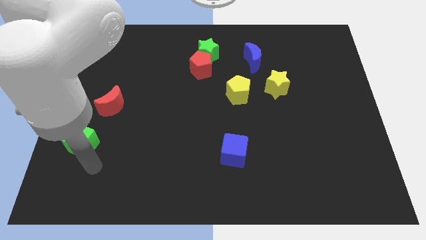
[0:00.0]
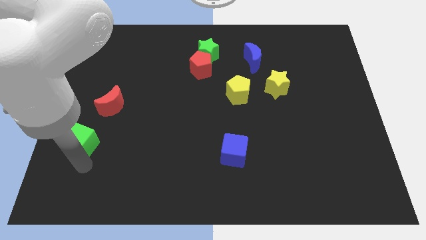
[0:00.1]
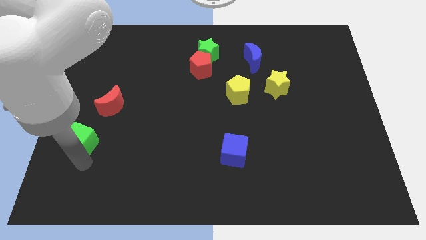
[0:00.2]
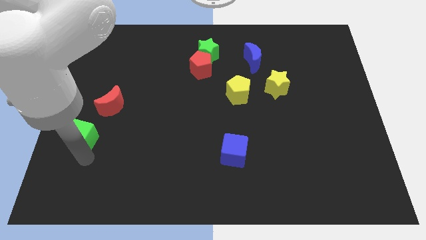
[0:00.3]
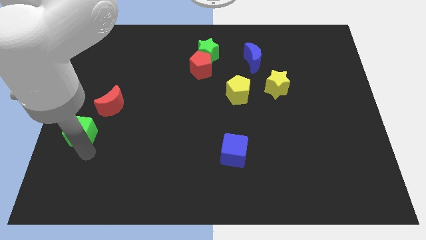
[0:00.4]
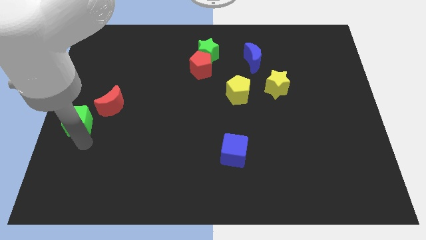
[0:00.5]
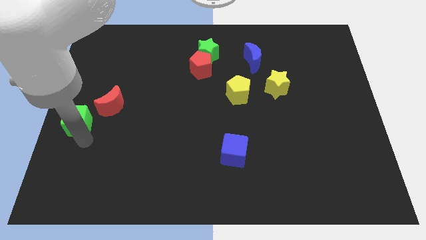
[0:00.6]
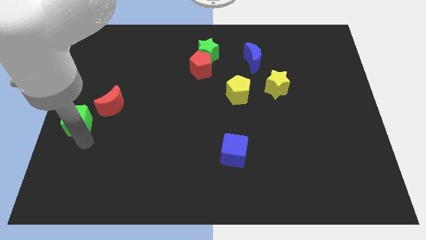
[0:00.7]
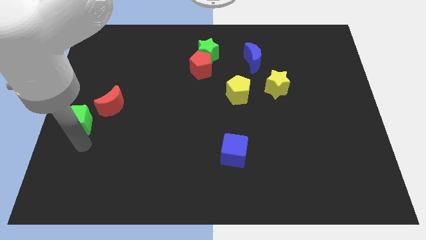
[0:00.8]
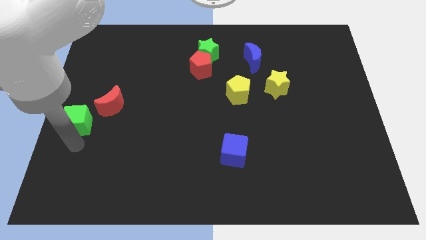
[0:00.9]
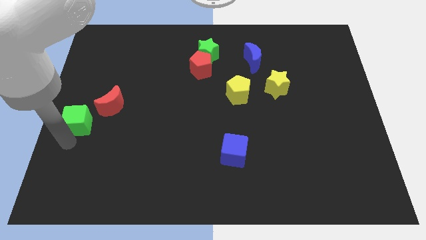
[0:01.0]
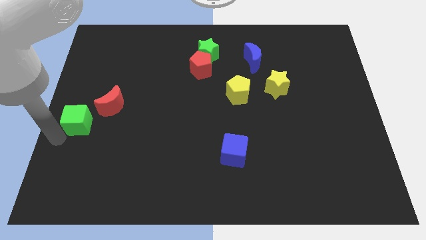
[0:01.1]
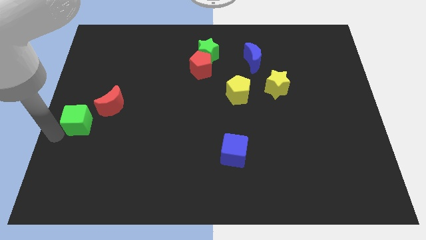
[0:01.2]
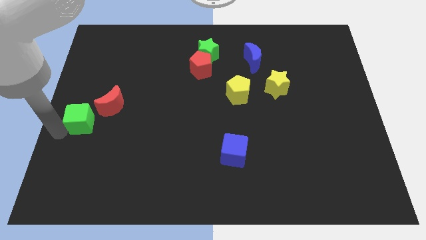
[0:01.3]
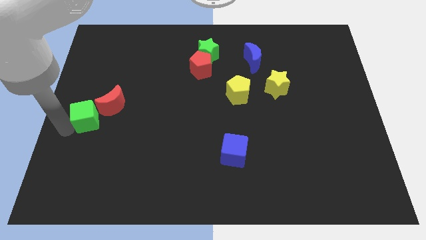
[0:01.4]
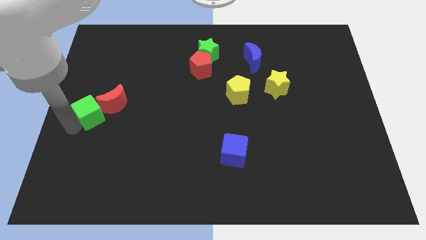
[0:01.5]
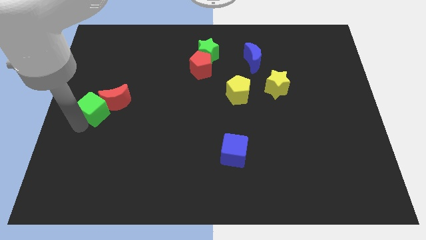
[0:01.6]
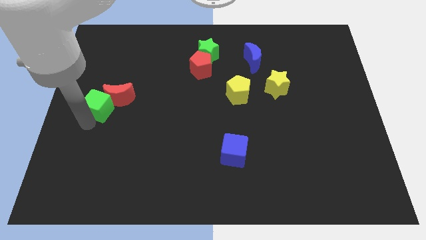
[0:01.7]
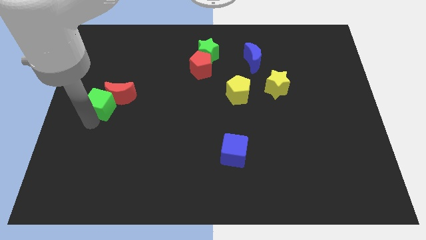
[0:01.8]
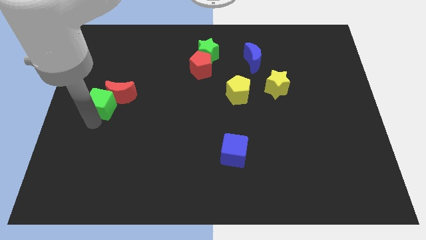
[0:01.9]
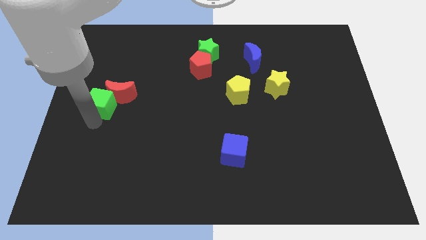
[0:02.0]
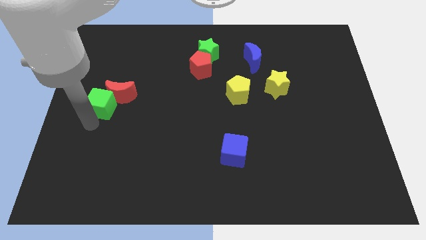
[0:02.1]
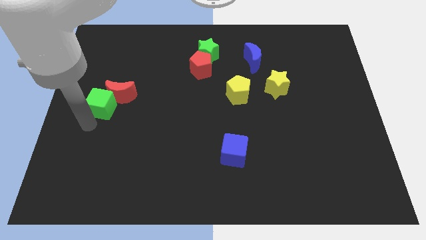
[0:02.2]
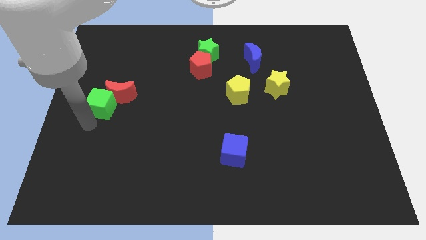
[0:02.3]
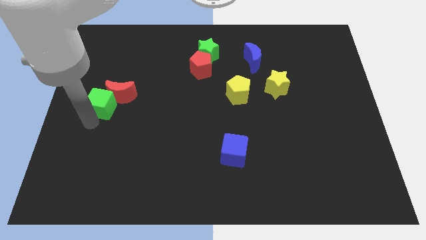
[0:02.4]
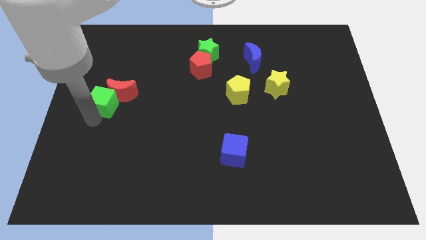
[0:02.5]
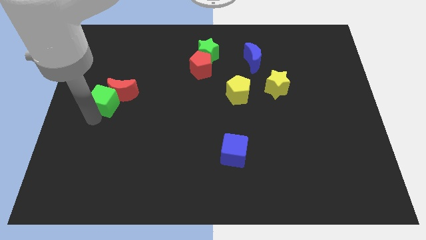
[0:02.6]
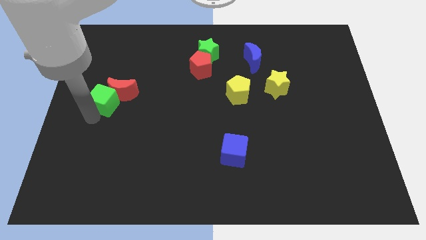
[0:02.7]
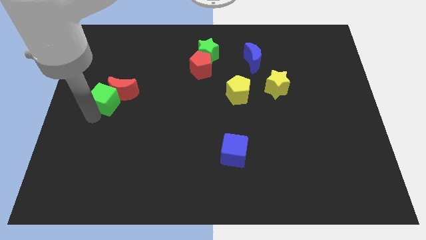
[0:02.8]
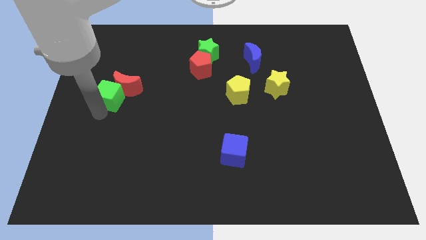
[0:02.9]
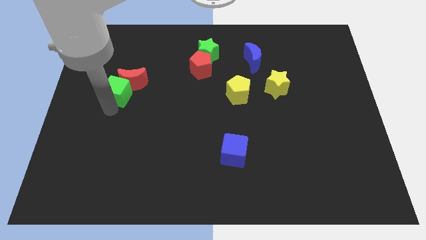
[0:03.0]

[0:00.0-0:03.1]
push the green cube into the red moon

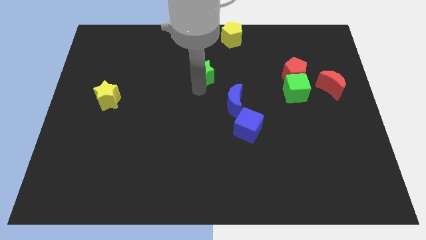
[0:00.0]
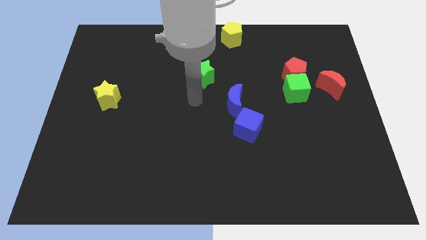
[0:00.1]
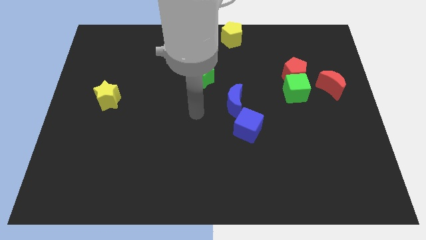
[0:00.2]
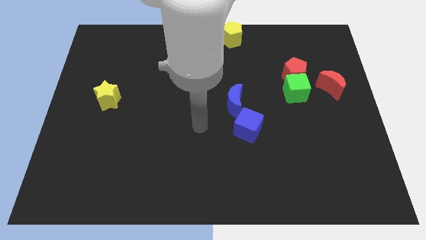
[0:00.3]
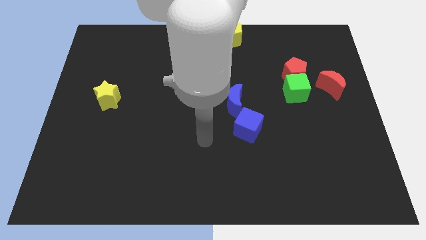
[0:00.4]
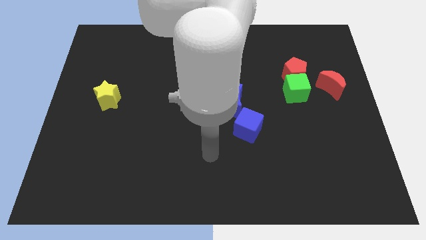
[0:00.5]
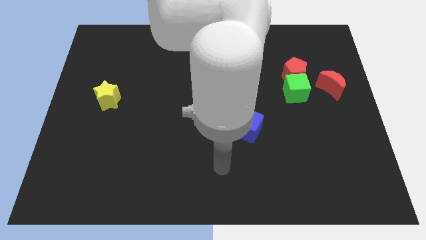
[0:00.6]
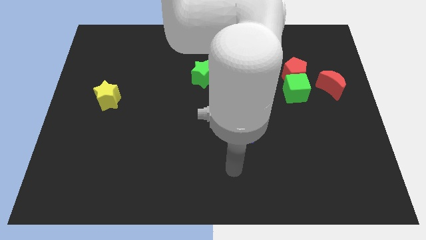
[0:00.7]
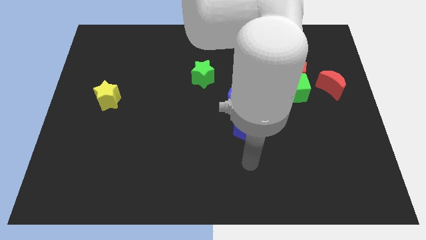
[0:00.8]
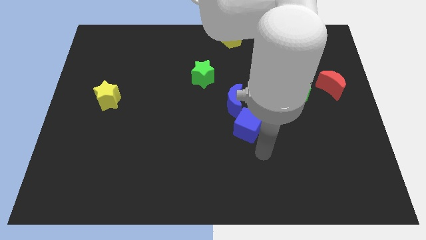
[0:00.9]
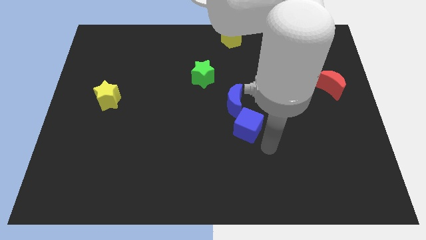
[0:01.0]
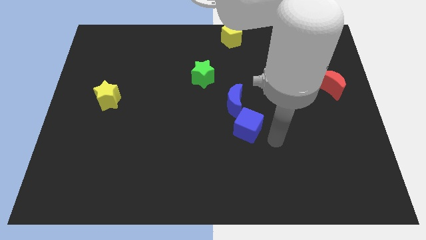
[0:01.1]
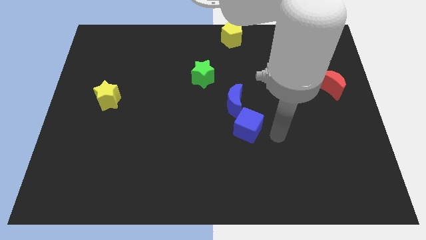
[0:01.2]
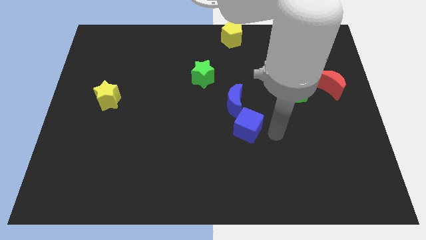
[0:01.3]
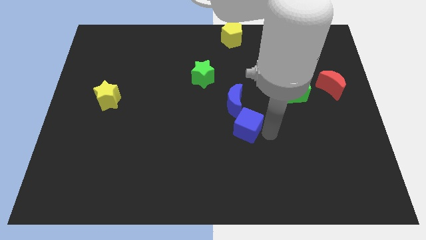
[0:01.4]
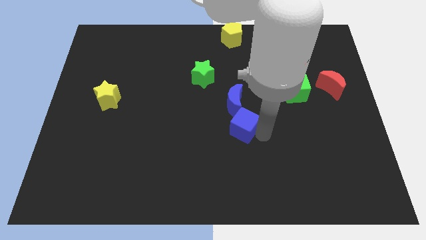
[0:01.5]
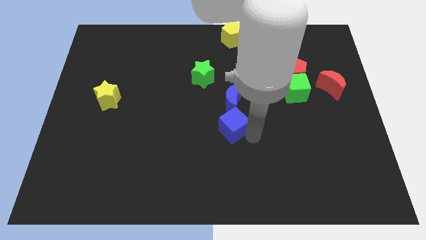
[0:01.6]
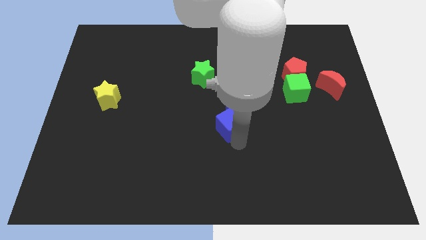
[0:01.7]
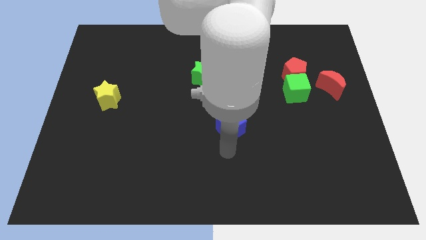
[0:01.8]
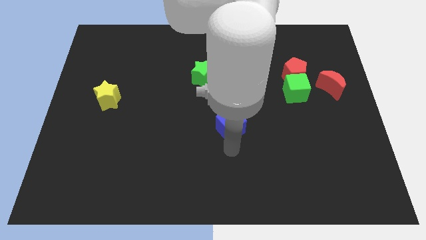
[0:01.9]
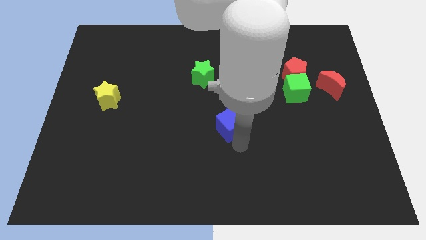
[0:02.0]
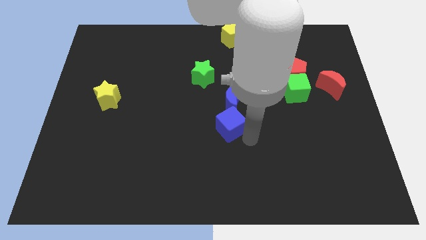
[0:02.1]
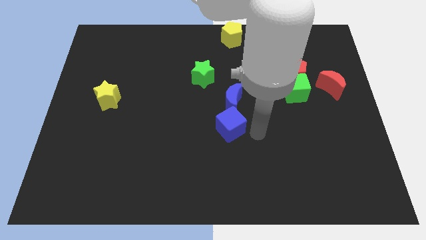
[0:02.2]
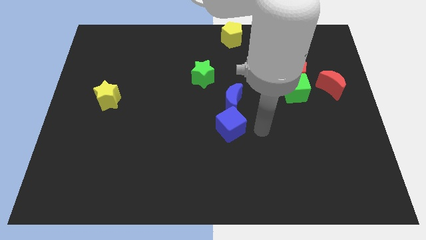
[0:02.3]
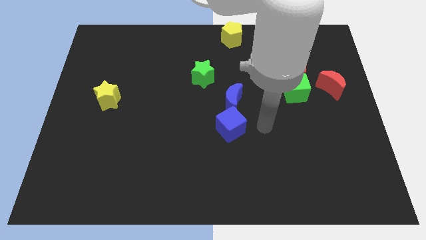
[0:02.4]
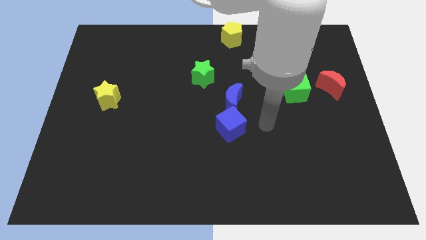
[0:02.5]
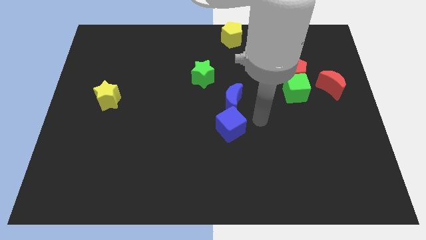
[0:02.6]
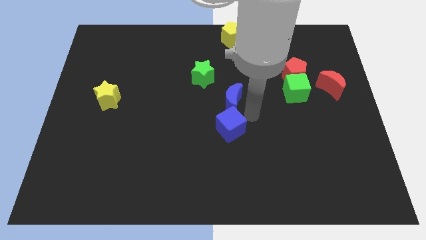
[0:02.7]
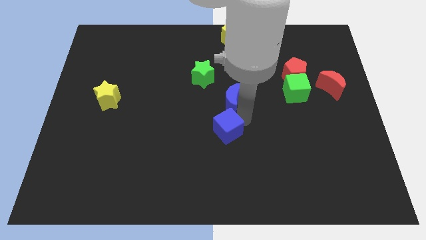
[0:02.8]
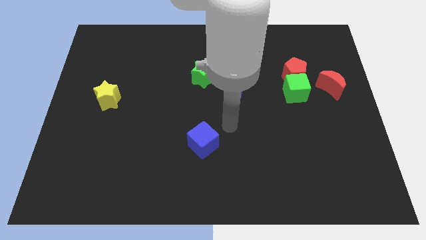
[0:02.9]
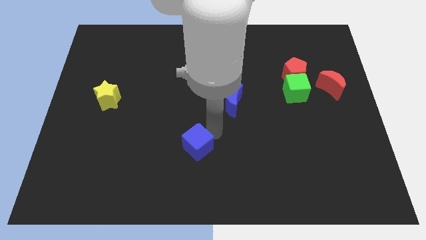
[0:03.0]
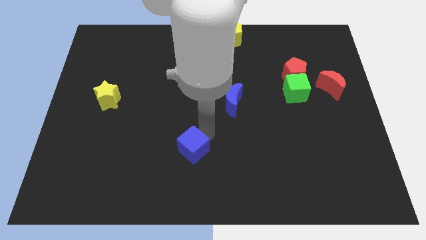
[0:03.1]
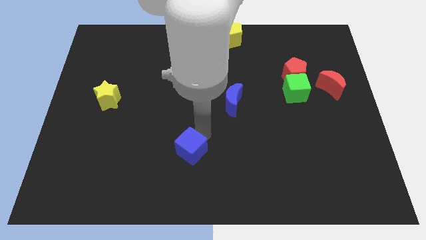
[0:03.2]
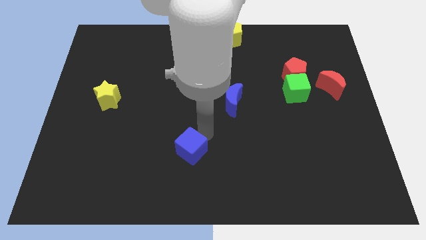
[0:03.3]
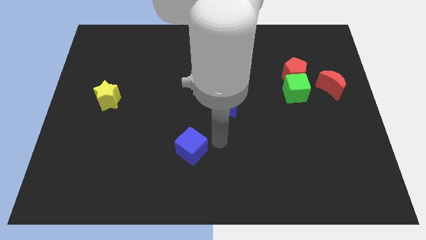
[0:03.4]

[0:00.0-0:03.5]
separate blue cube from the blue crescent

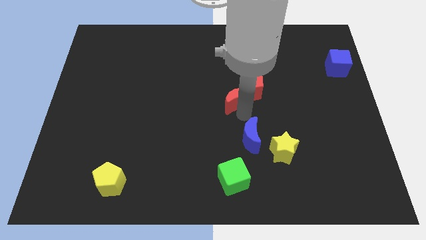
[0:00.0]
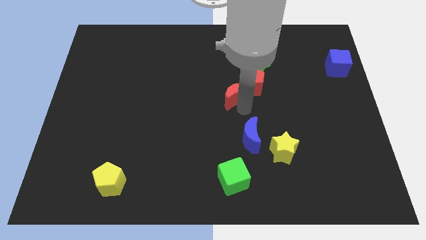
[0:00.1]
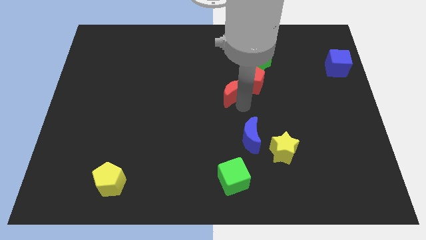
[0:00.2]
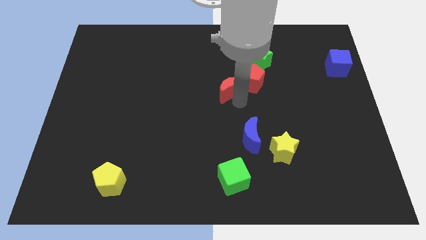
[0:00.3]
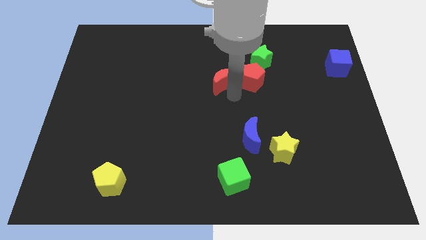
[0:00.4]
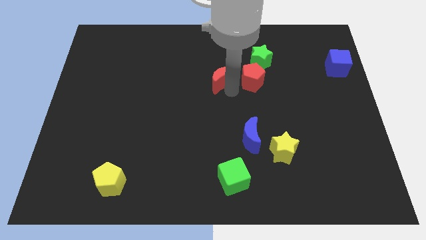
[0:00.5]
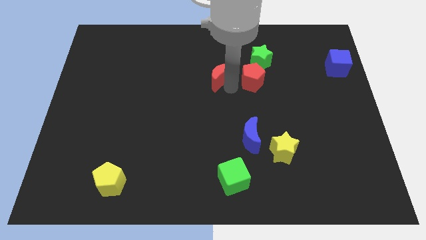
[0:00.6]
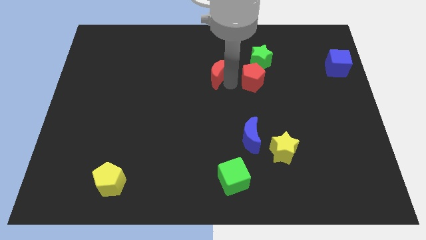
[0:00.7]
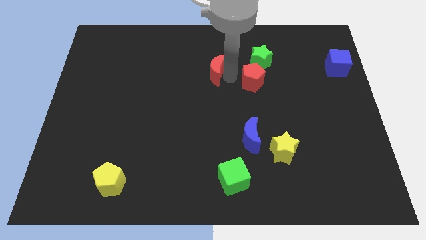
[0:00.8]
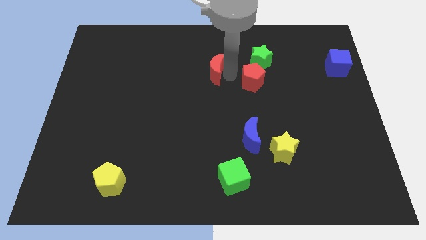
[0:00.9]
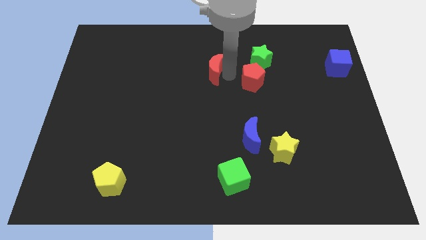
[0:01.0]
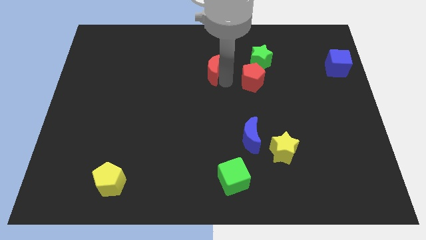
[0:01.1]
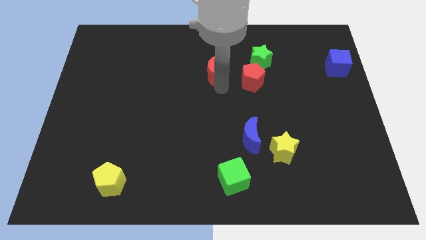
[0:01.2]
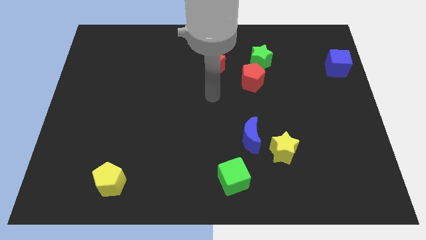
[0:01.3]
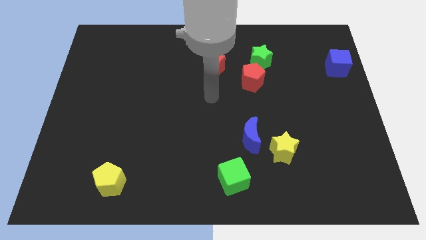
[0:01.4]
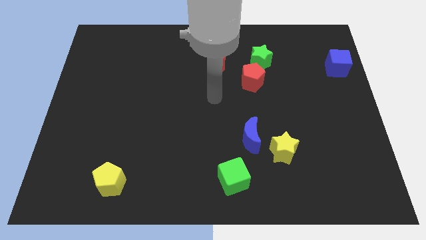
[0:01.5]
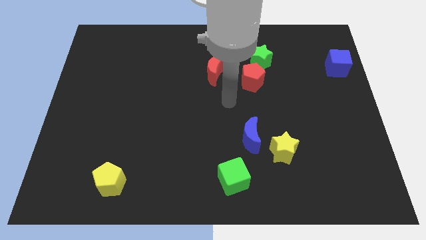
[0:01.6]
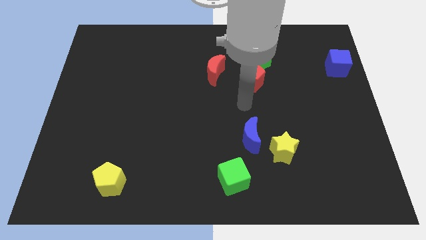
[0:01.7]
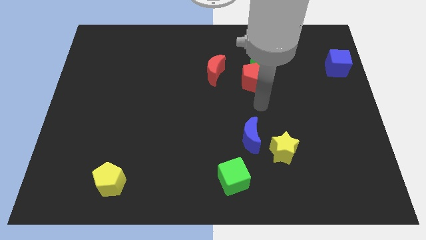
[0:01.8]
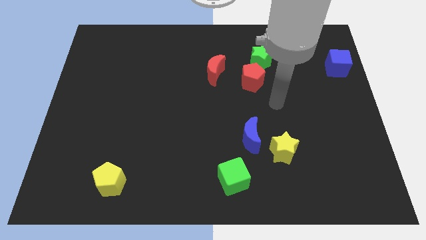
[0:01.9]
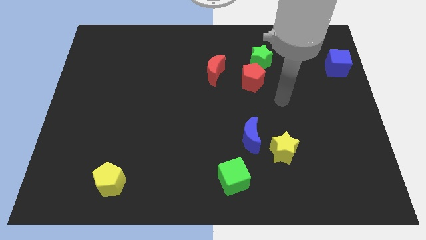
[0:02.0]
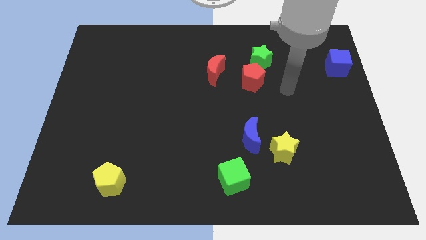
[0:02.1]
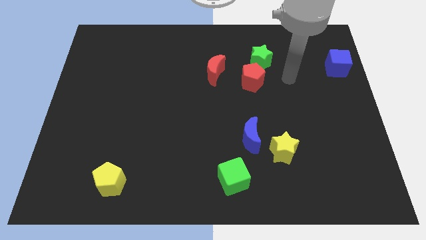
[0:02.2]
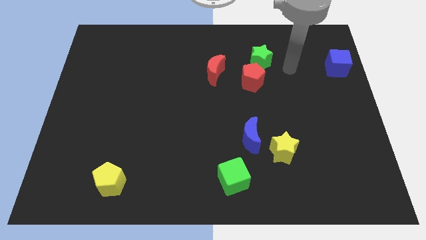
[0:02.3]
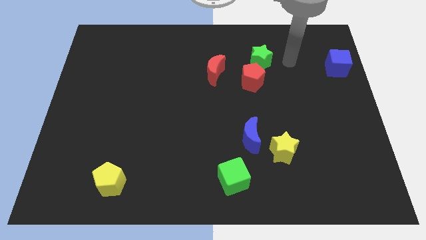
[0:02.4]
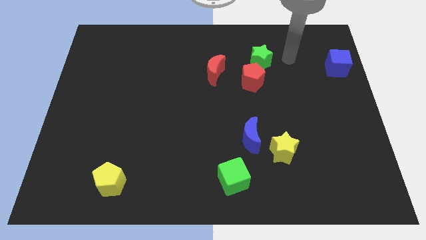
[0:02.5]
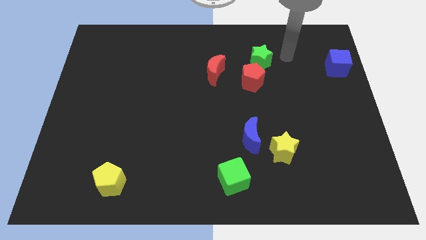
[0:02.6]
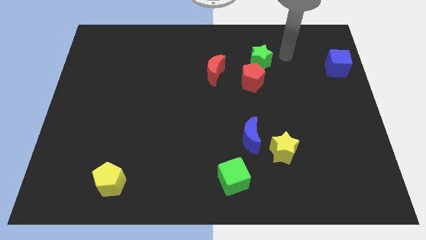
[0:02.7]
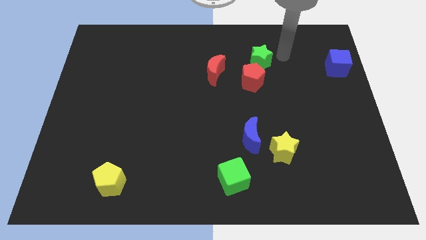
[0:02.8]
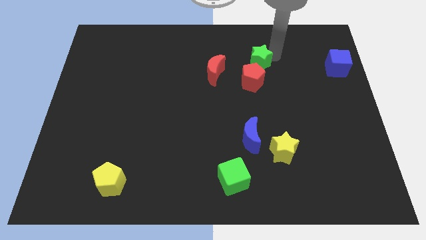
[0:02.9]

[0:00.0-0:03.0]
push the red crescent towards the top side of the board
